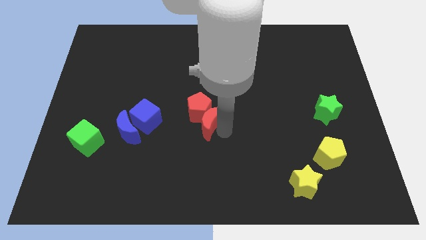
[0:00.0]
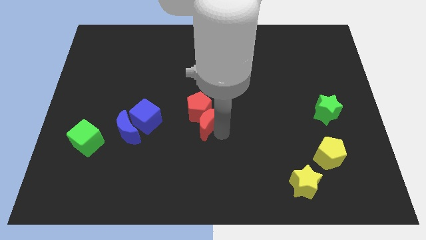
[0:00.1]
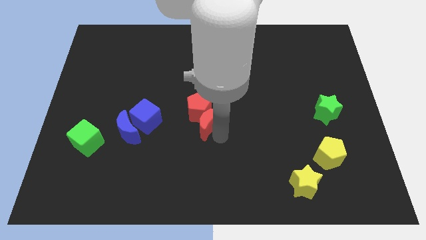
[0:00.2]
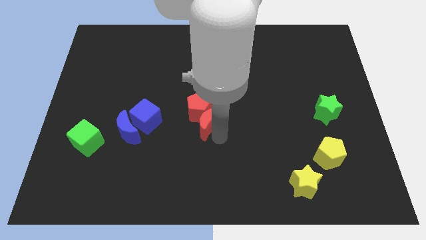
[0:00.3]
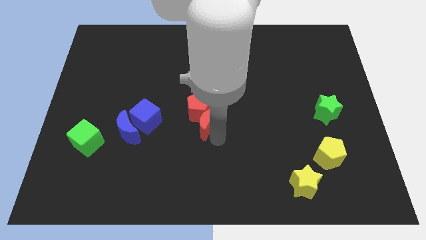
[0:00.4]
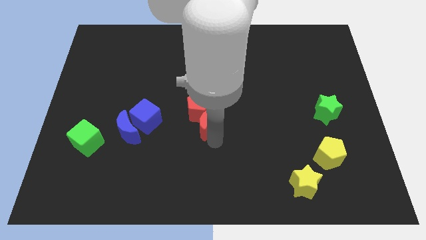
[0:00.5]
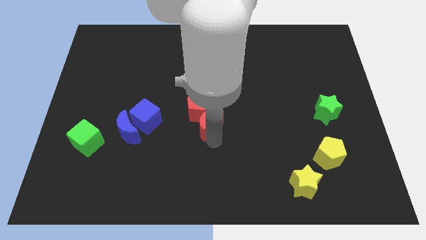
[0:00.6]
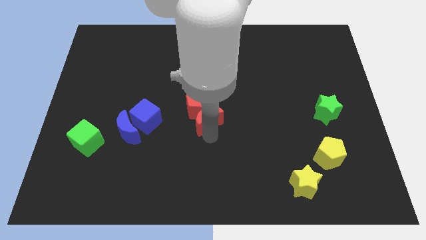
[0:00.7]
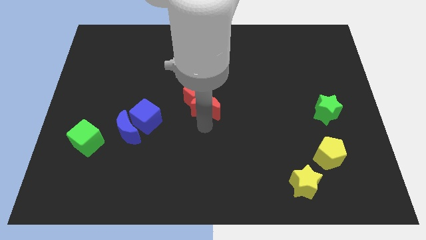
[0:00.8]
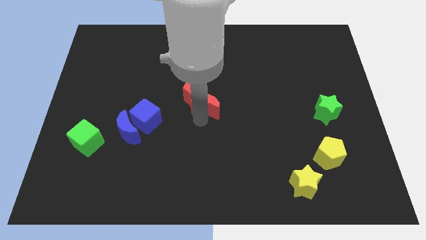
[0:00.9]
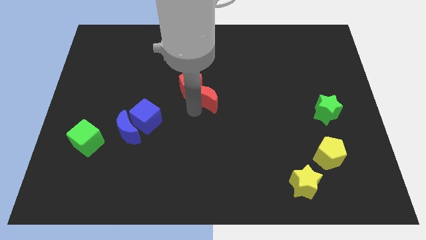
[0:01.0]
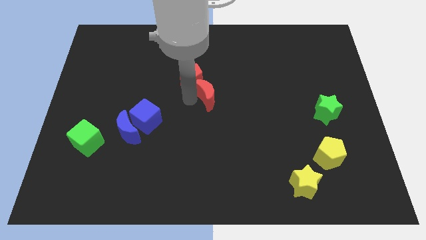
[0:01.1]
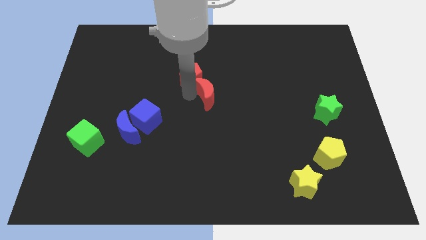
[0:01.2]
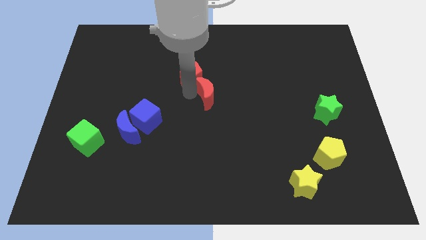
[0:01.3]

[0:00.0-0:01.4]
push the red crescent and pentagon towards top

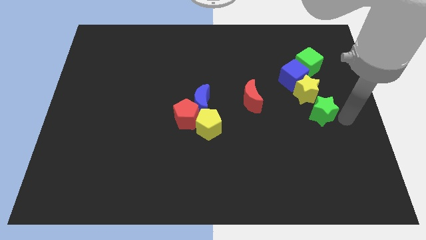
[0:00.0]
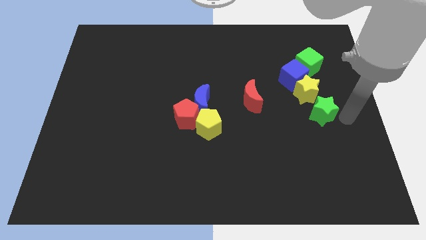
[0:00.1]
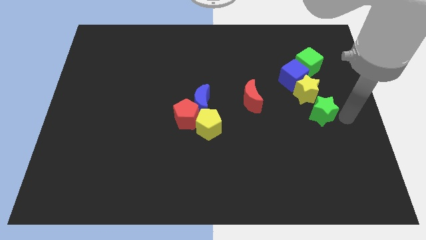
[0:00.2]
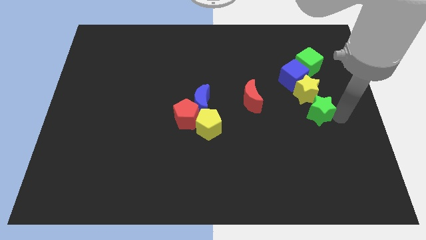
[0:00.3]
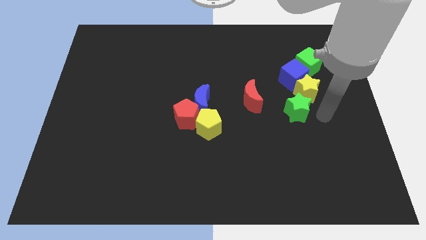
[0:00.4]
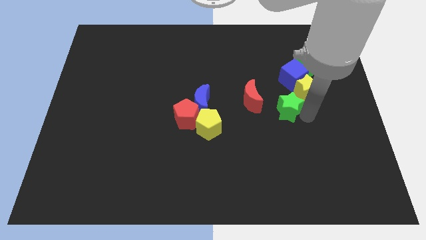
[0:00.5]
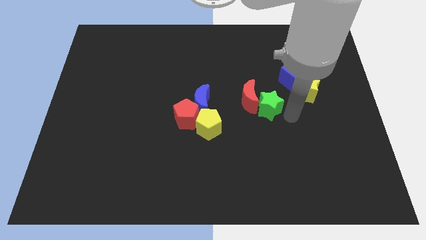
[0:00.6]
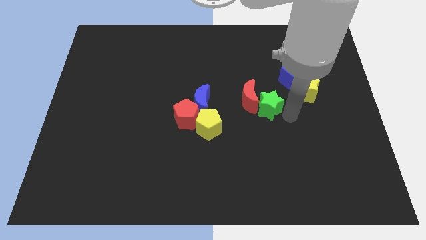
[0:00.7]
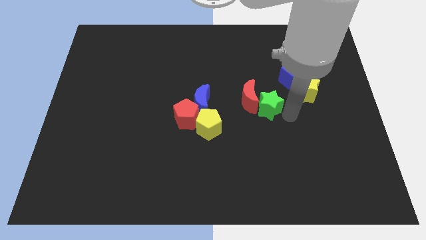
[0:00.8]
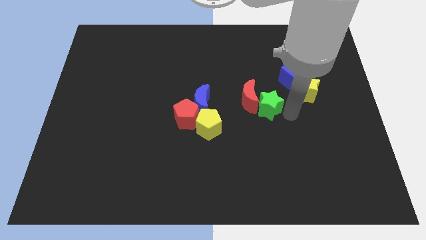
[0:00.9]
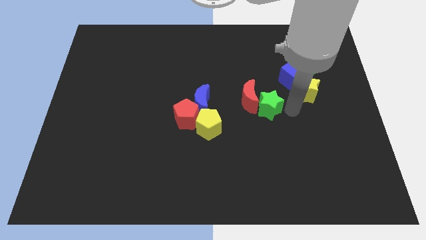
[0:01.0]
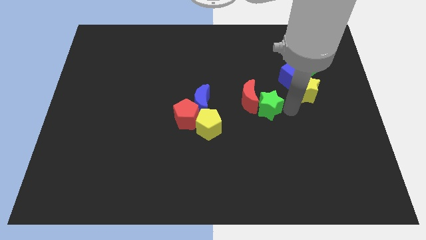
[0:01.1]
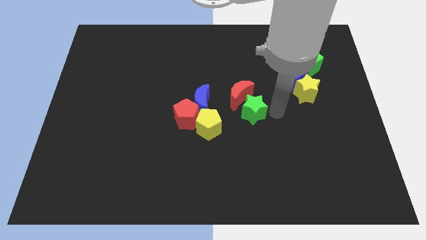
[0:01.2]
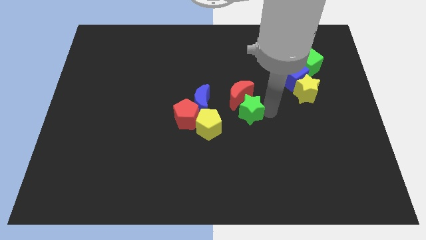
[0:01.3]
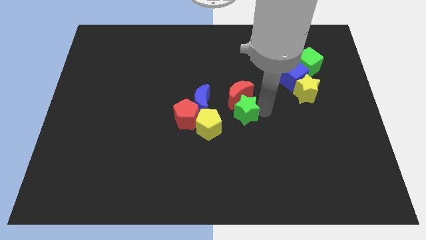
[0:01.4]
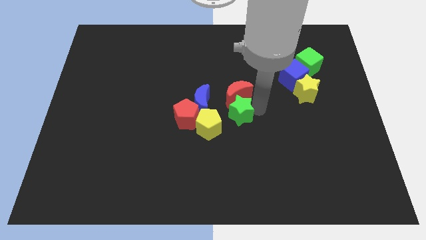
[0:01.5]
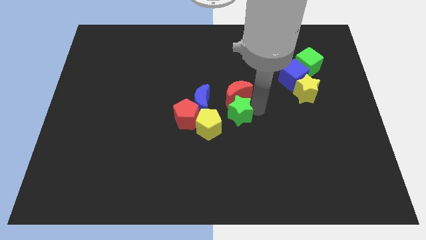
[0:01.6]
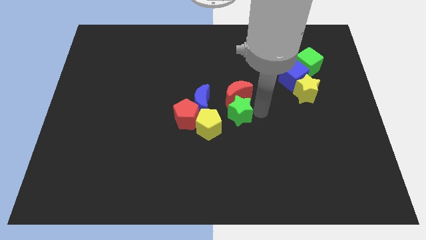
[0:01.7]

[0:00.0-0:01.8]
push the green star towards the red crescent

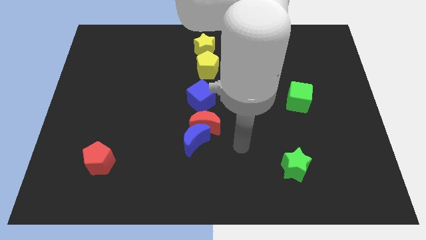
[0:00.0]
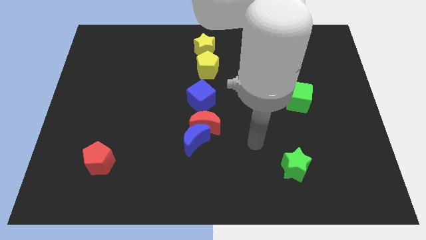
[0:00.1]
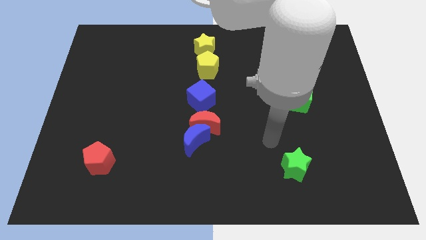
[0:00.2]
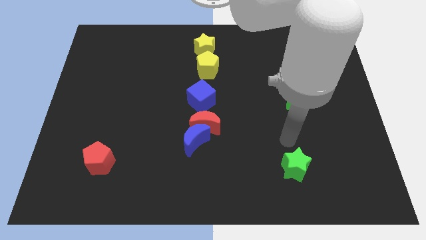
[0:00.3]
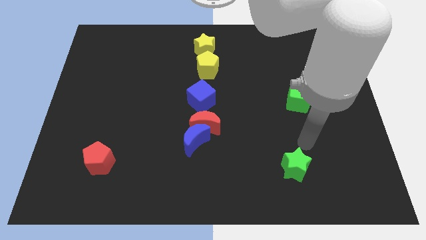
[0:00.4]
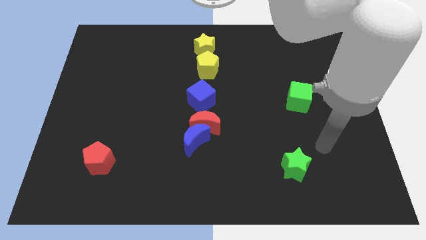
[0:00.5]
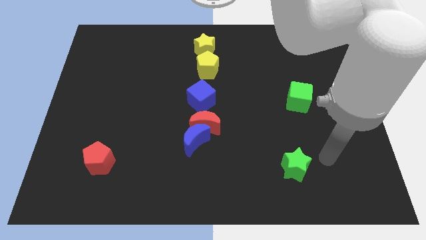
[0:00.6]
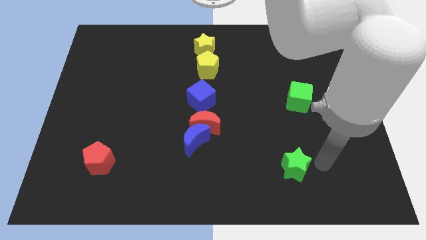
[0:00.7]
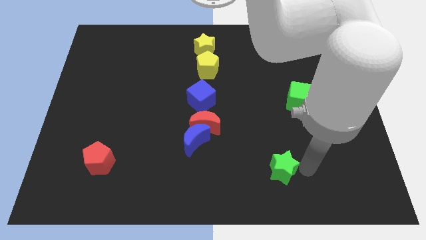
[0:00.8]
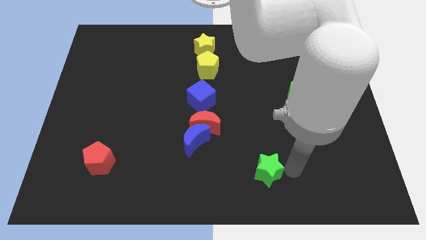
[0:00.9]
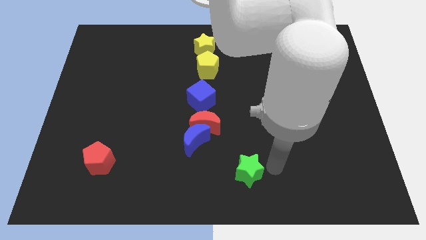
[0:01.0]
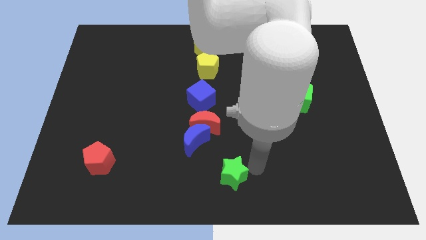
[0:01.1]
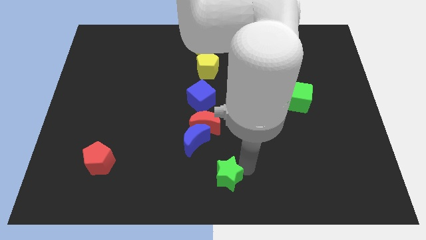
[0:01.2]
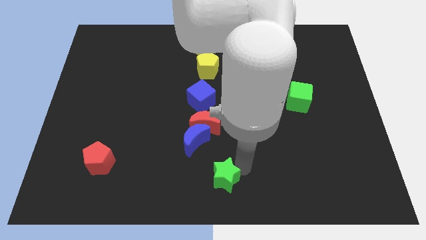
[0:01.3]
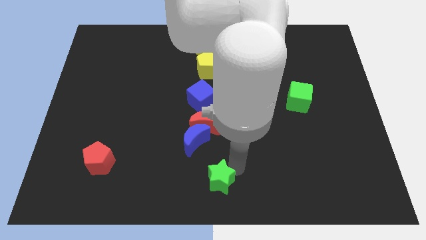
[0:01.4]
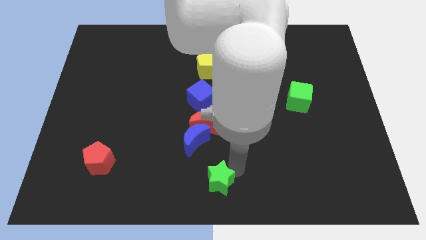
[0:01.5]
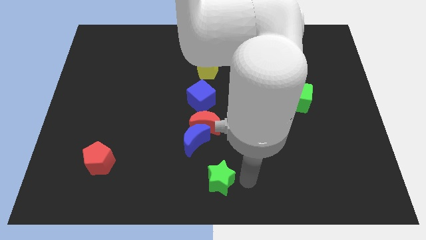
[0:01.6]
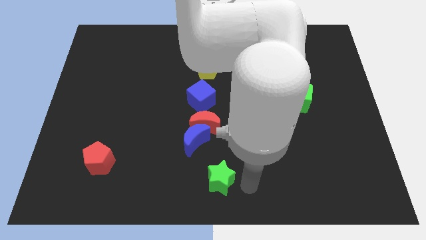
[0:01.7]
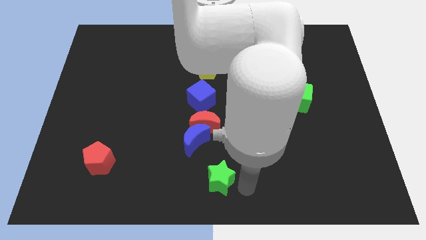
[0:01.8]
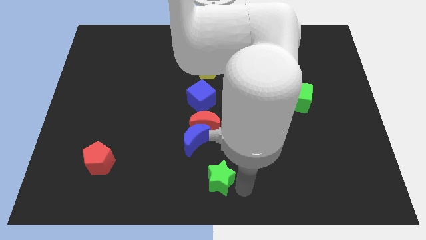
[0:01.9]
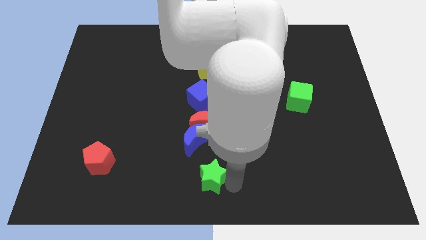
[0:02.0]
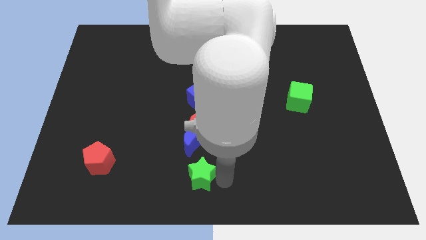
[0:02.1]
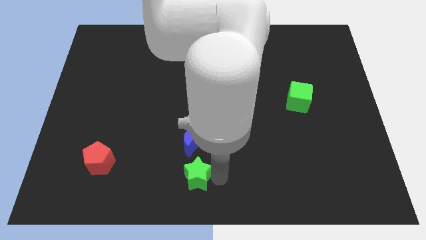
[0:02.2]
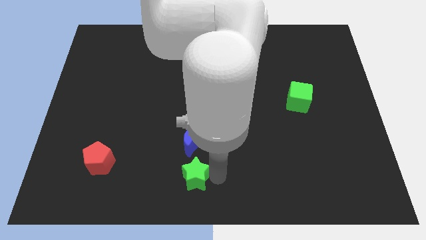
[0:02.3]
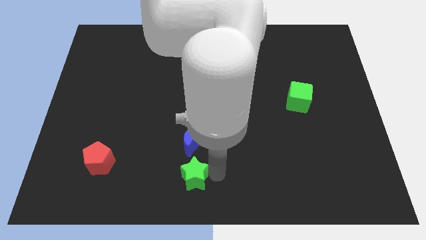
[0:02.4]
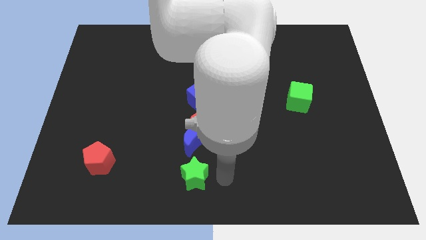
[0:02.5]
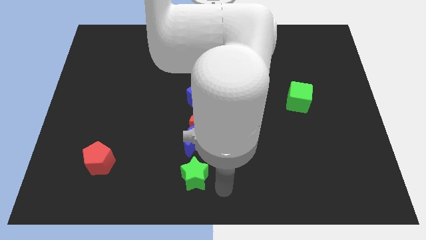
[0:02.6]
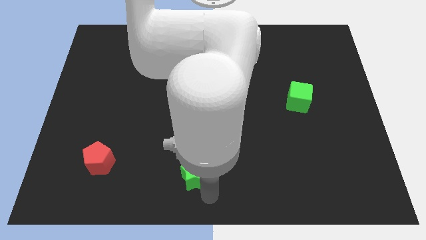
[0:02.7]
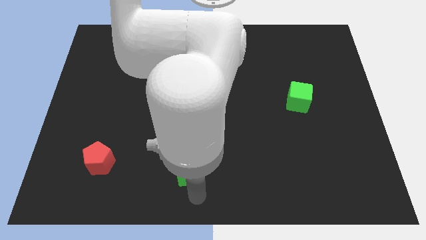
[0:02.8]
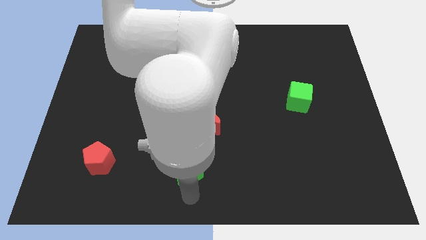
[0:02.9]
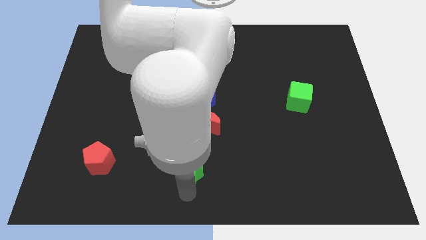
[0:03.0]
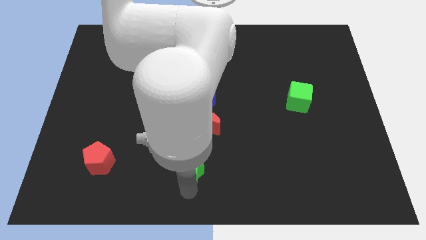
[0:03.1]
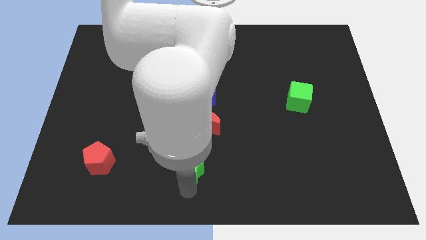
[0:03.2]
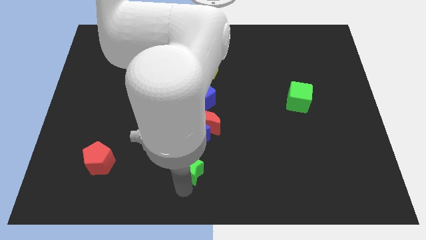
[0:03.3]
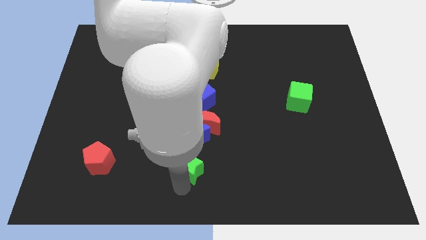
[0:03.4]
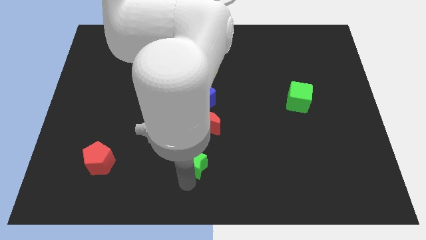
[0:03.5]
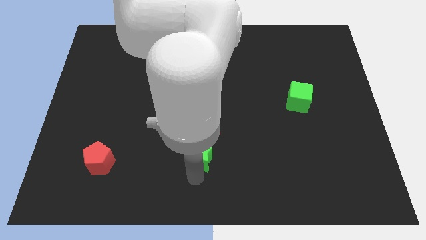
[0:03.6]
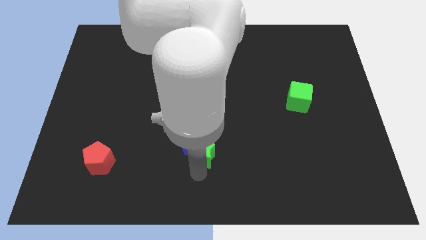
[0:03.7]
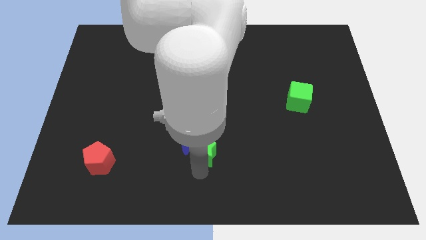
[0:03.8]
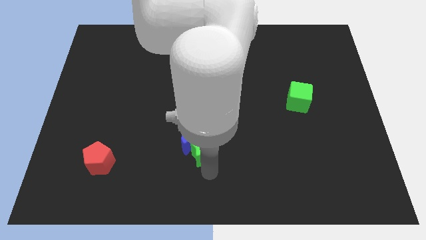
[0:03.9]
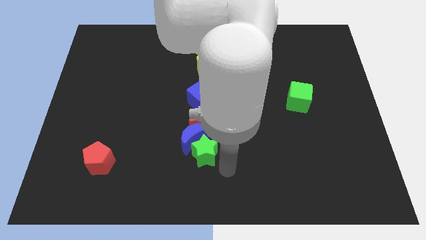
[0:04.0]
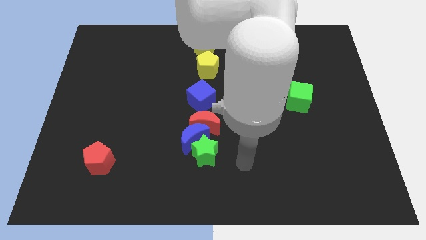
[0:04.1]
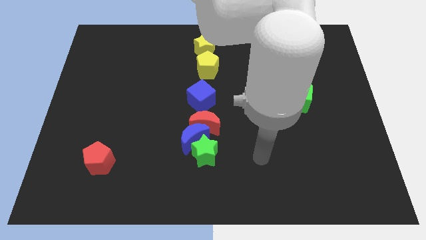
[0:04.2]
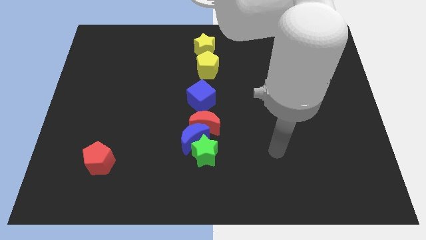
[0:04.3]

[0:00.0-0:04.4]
push the green star into the blue moon

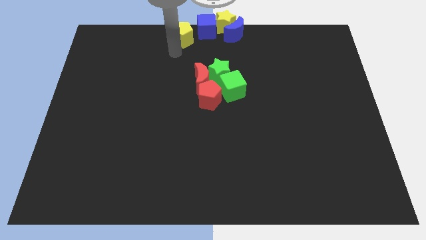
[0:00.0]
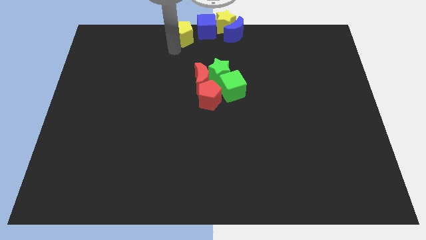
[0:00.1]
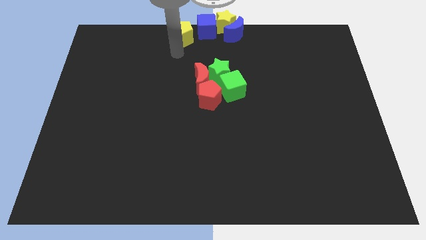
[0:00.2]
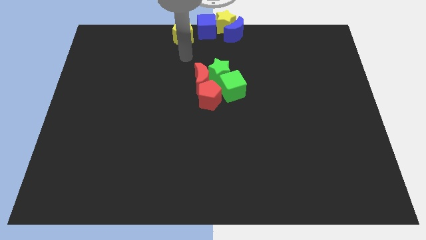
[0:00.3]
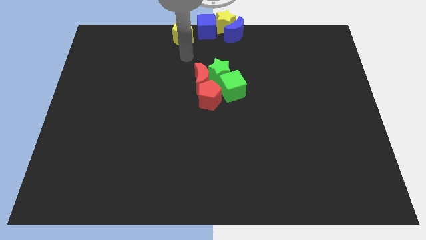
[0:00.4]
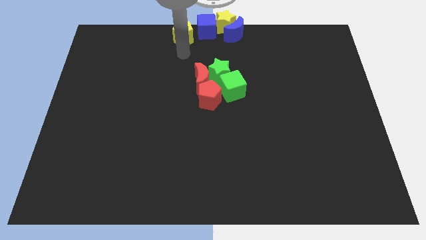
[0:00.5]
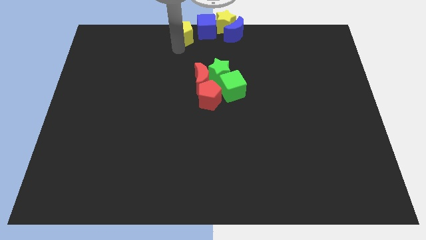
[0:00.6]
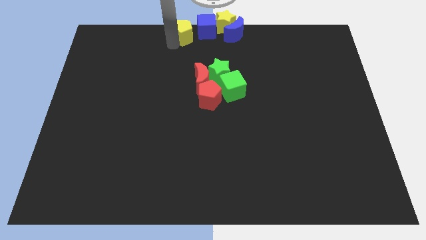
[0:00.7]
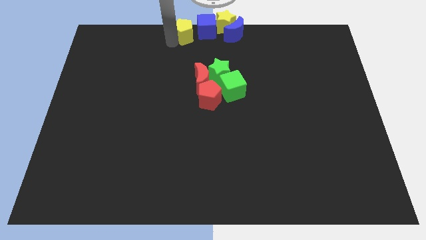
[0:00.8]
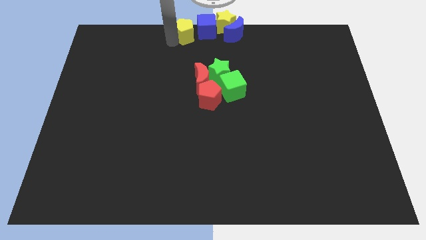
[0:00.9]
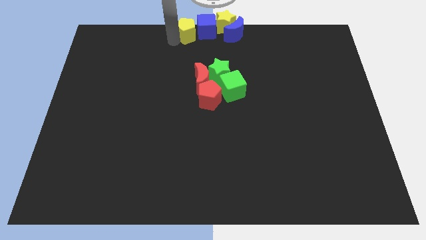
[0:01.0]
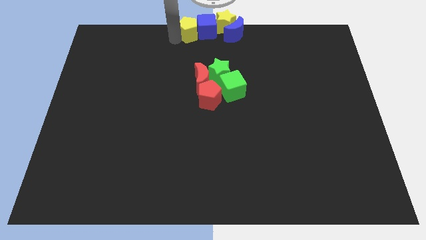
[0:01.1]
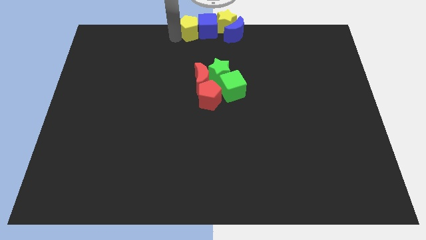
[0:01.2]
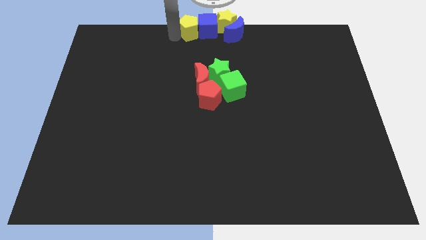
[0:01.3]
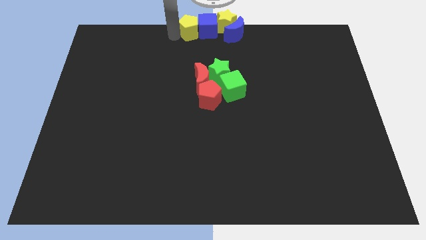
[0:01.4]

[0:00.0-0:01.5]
push yellow pentagon beside blue cube at top center
